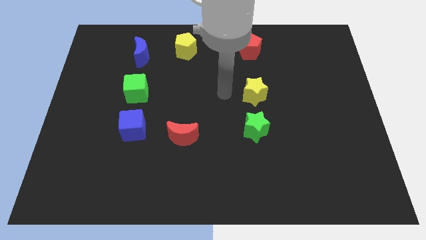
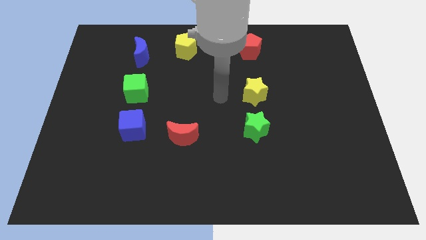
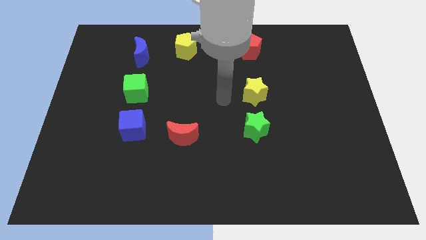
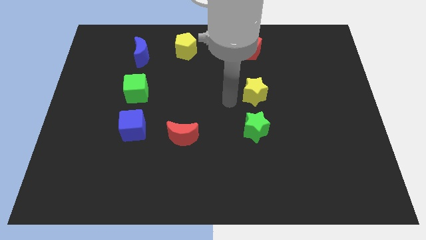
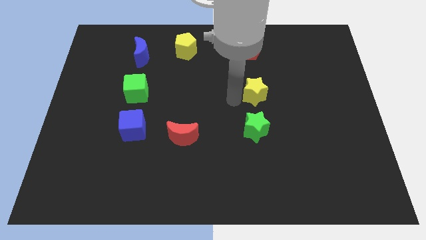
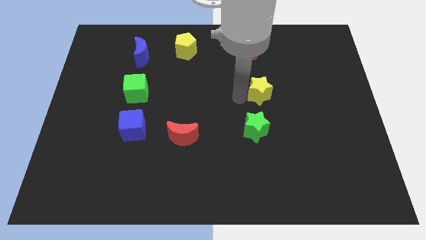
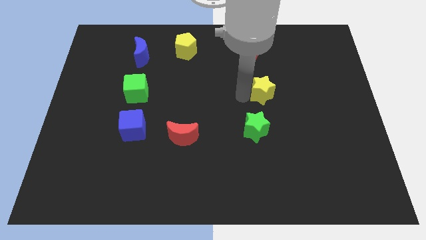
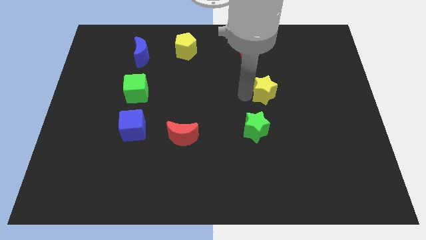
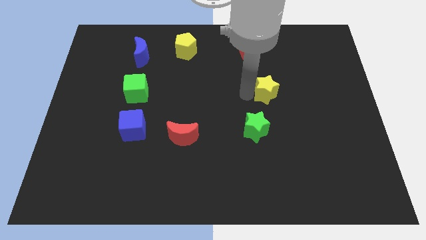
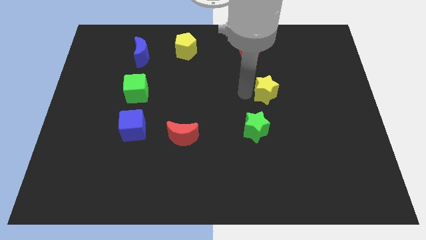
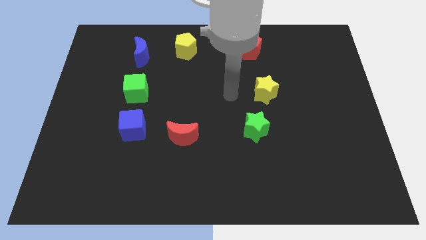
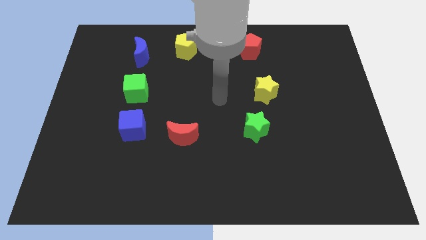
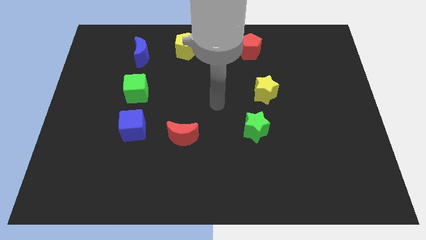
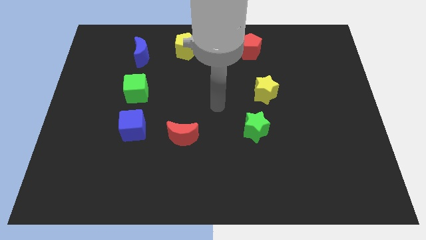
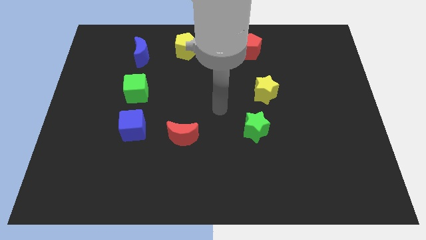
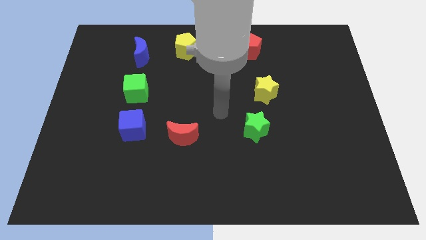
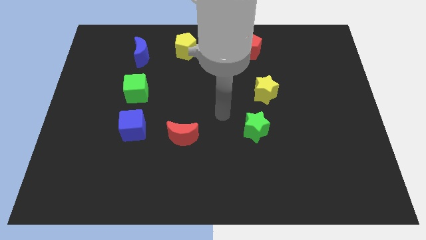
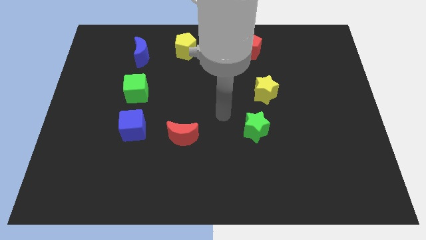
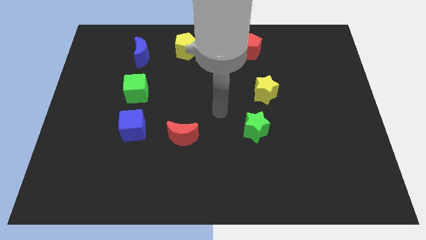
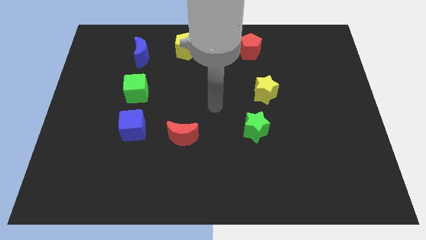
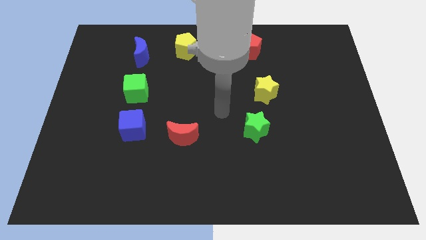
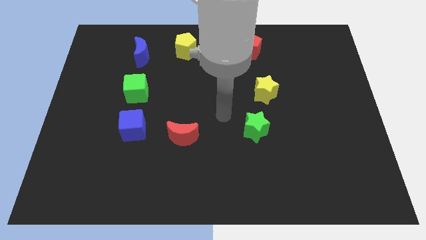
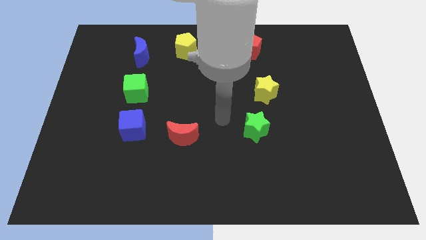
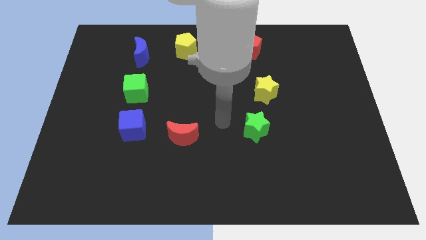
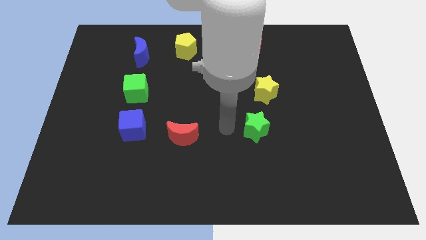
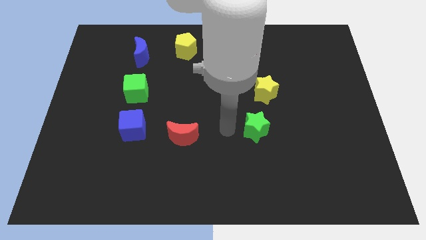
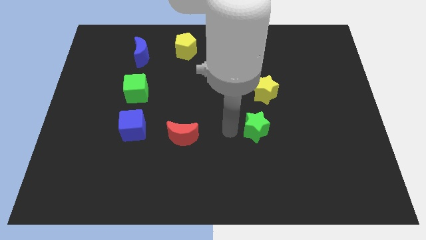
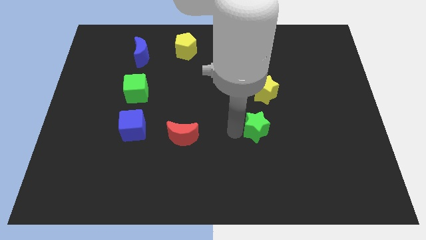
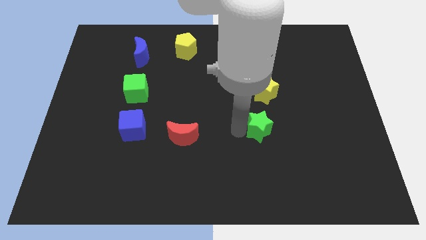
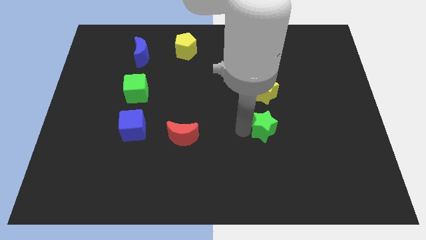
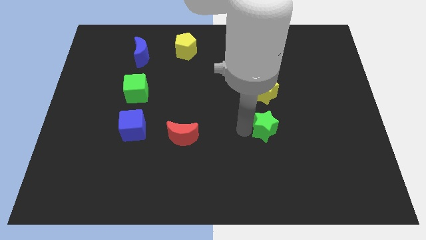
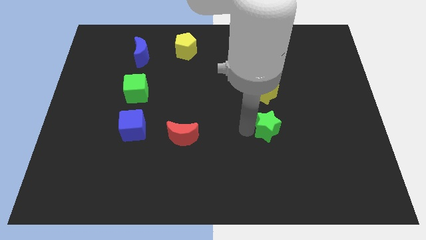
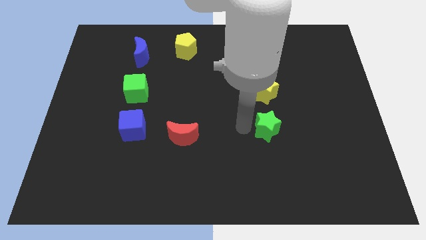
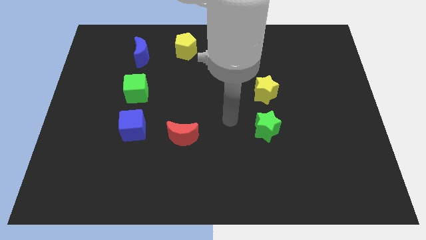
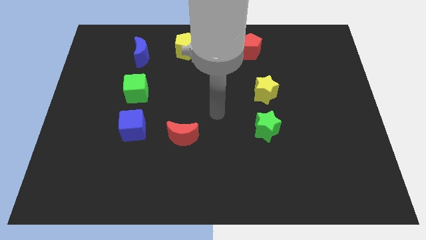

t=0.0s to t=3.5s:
move the green star below to the yellow star

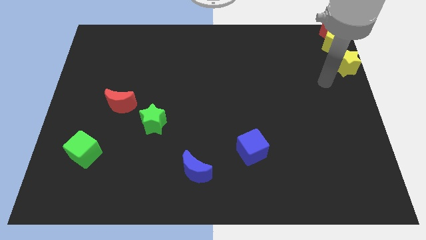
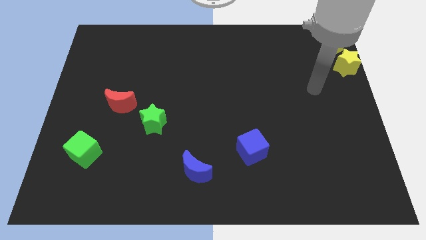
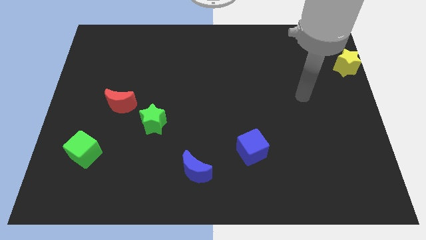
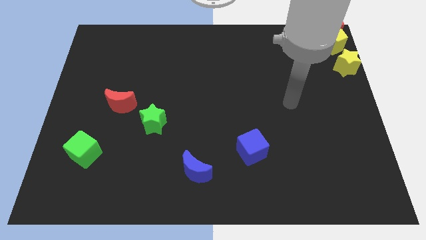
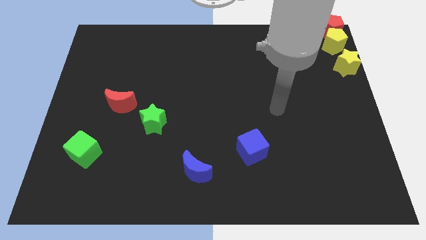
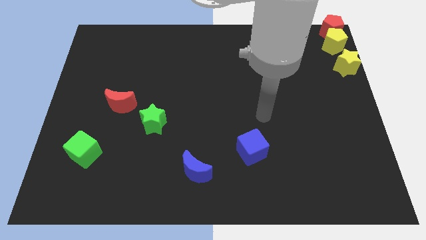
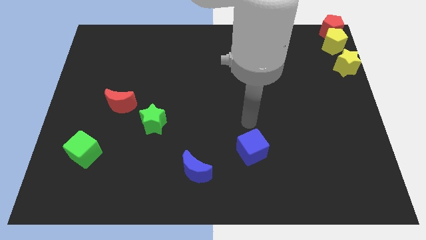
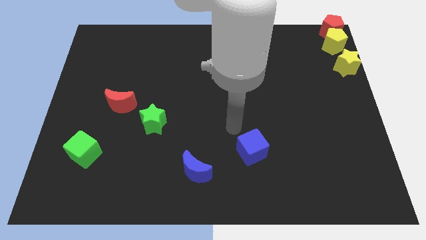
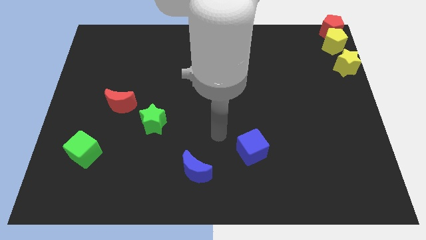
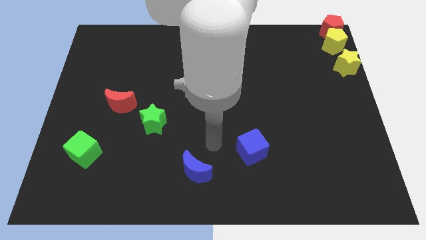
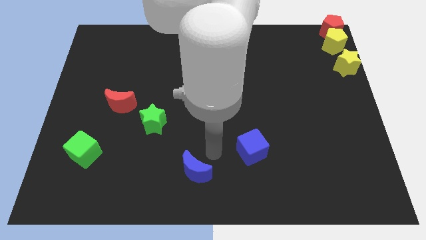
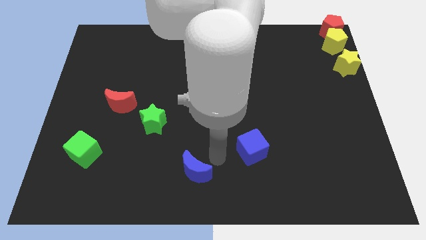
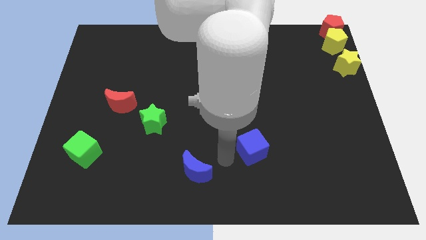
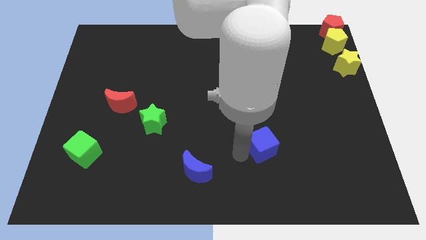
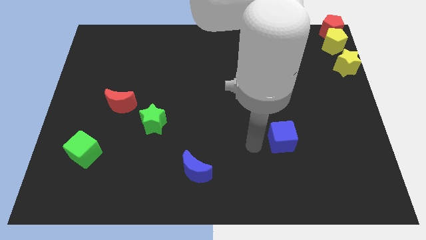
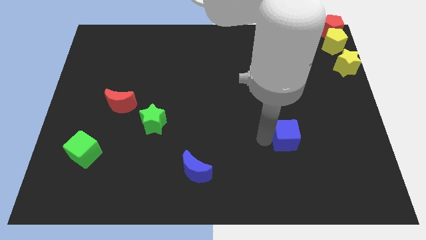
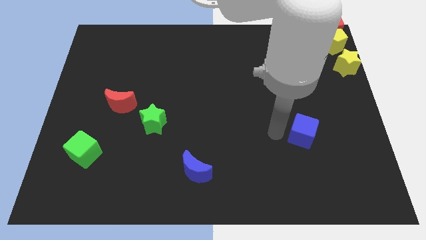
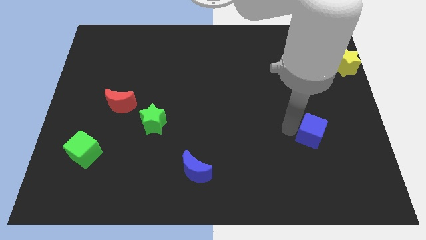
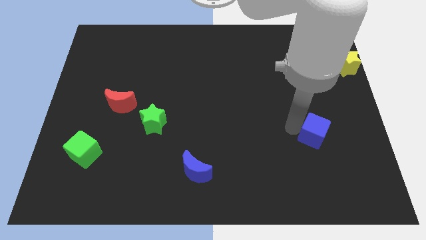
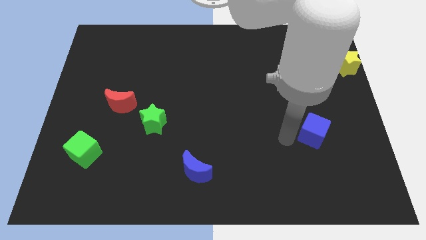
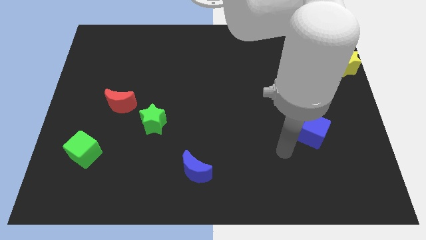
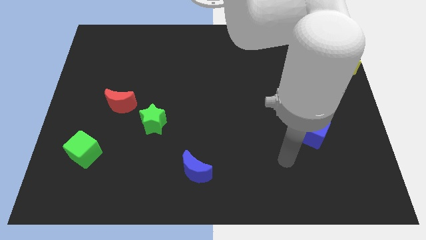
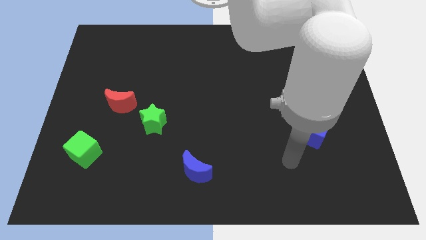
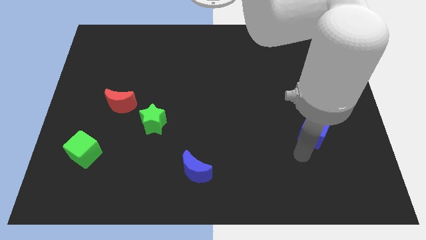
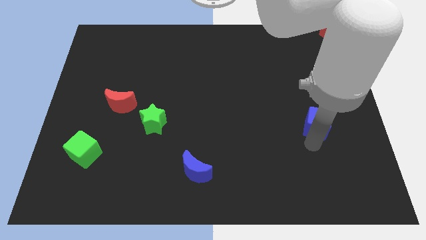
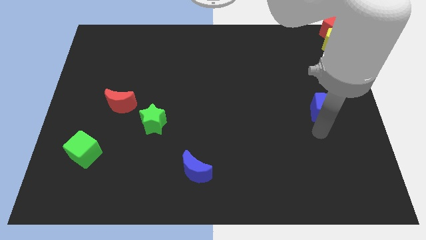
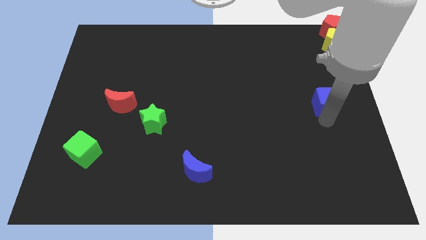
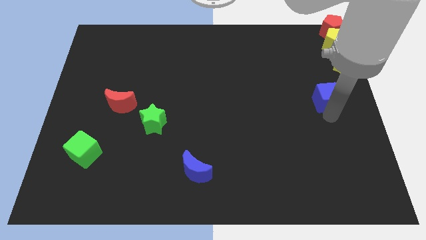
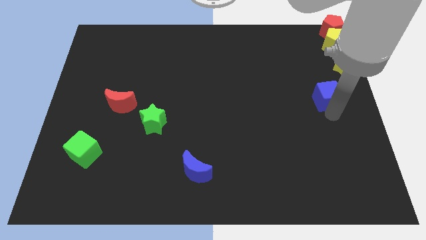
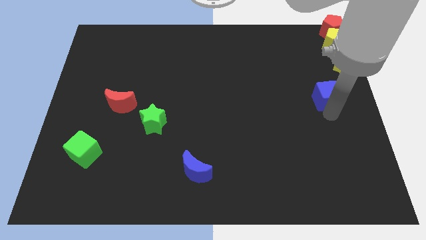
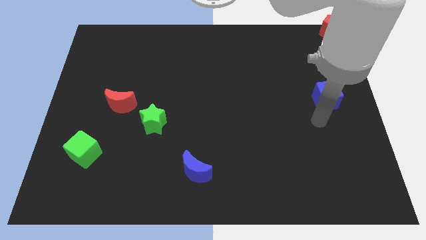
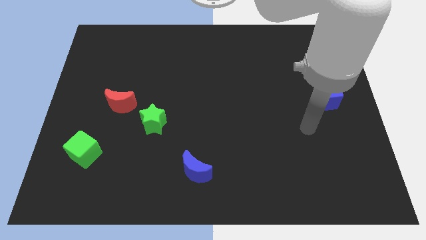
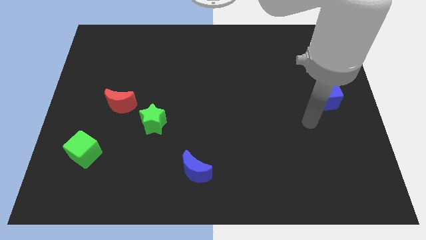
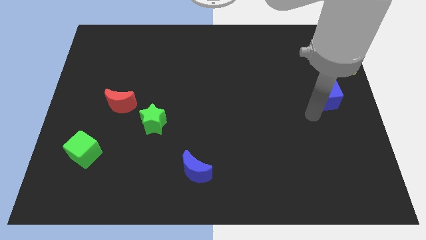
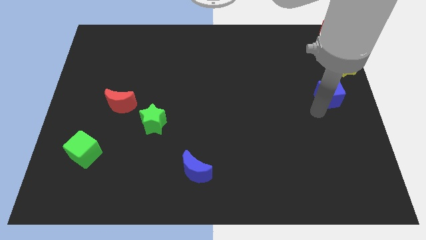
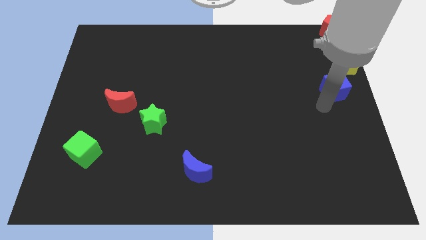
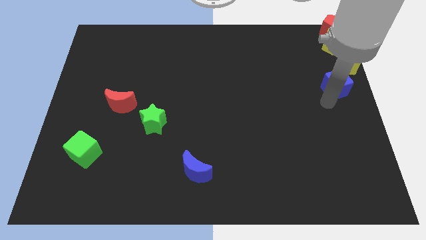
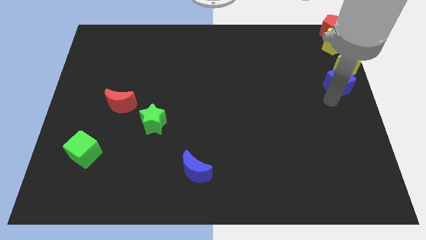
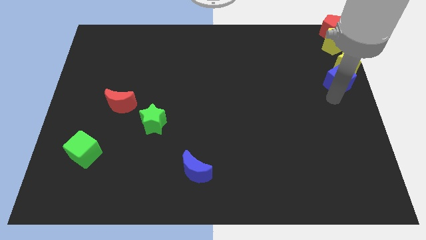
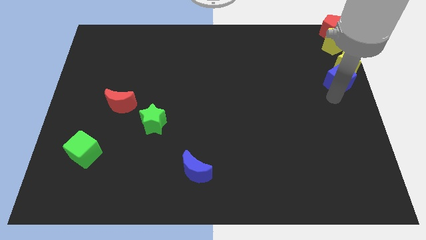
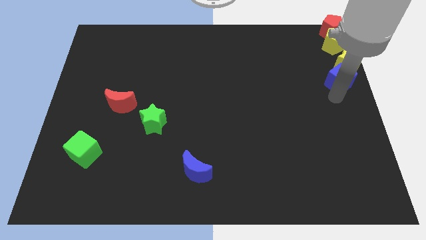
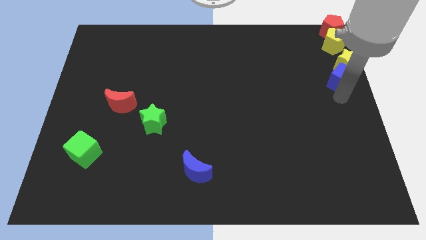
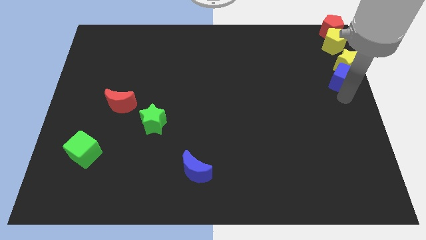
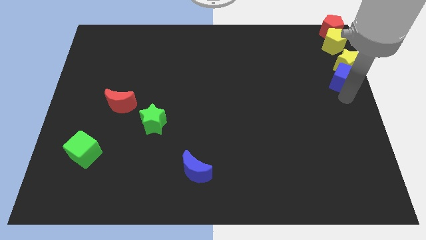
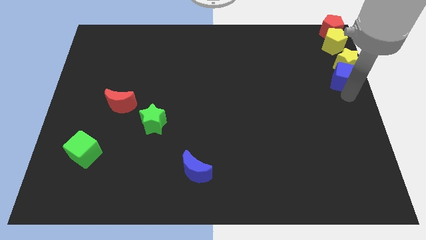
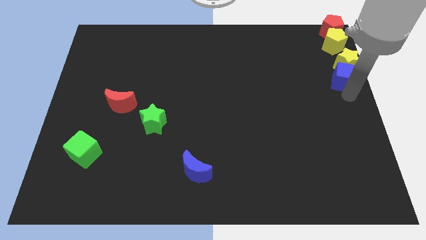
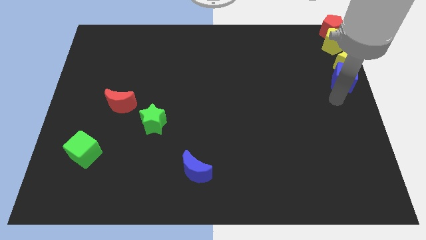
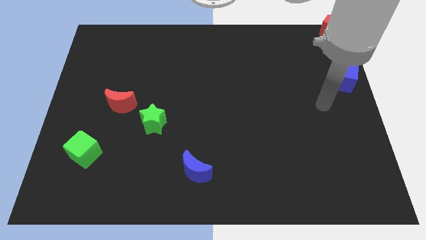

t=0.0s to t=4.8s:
push the blue cube into yellow star

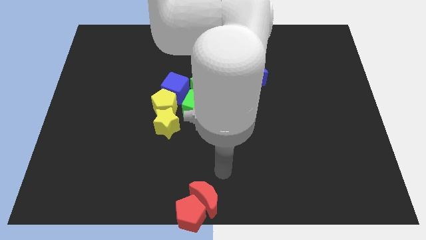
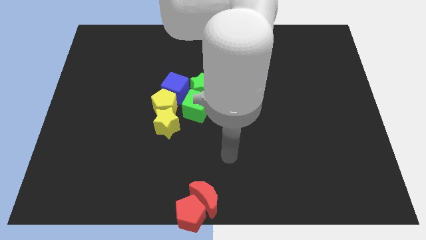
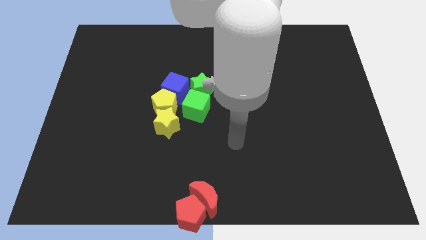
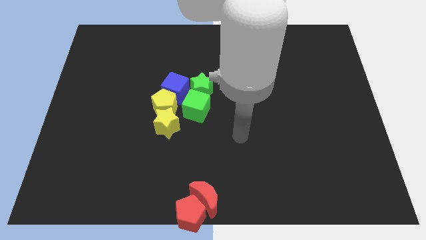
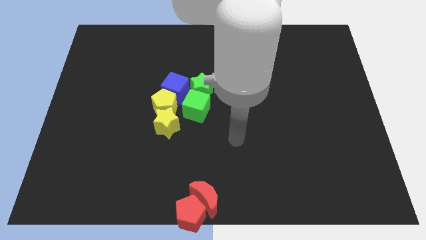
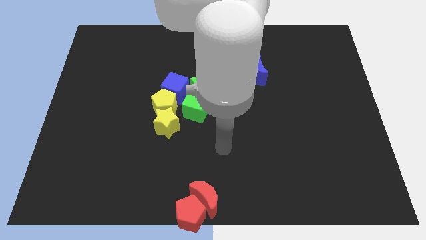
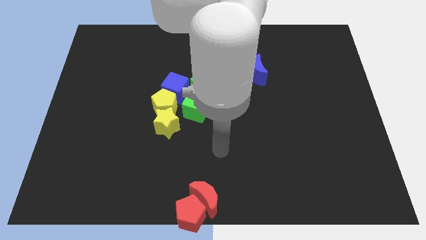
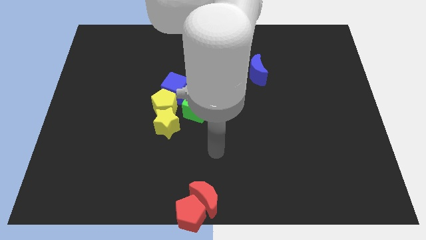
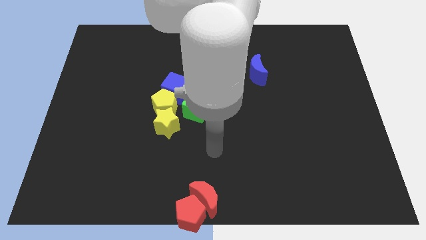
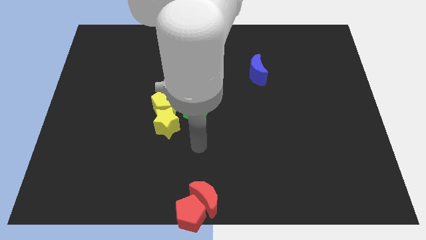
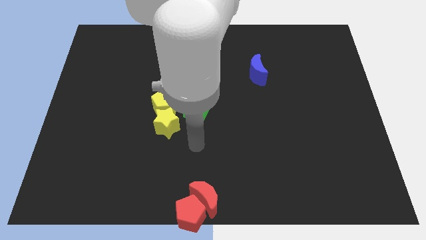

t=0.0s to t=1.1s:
move your hand close to green cube
